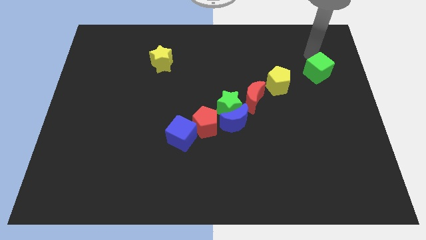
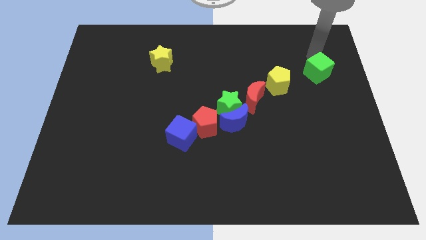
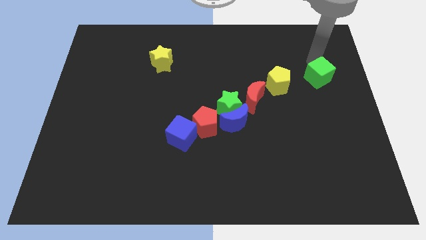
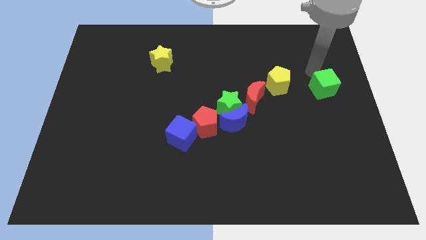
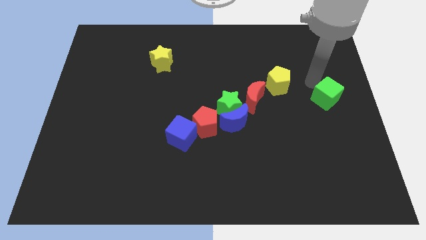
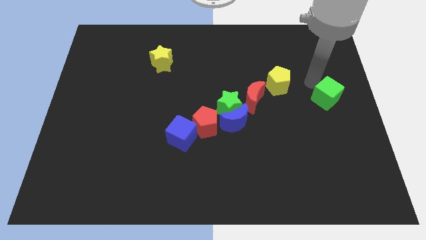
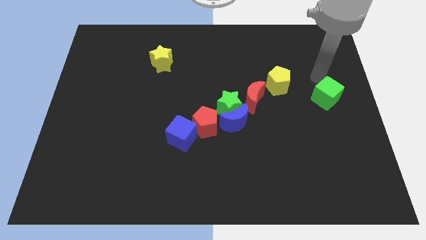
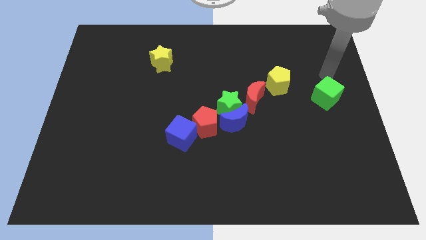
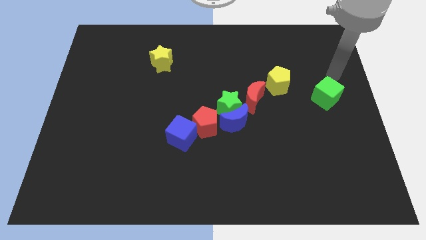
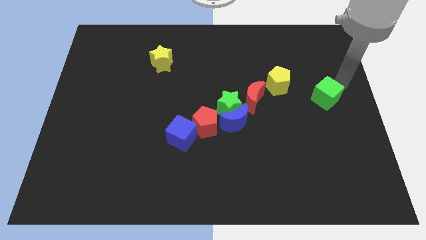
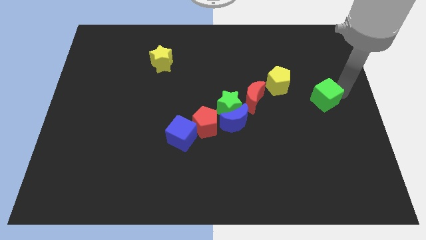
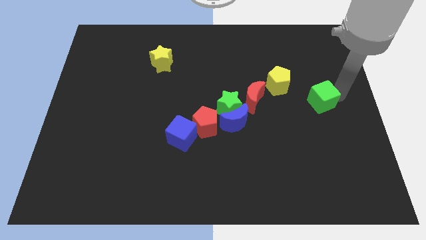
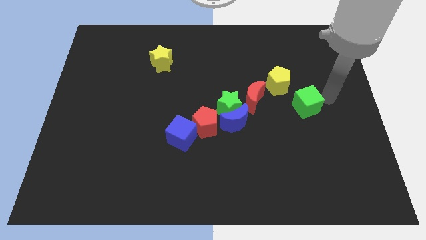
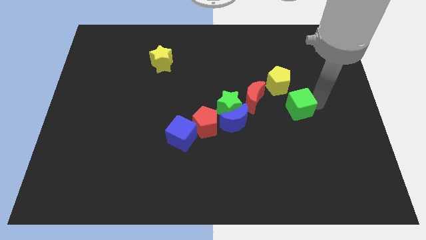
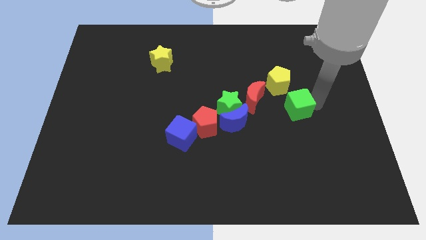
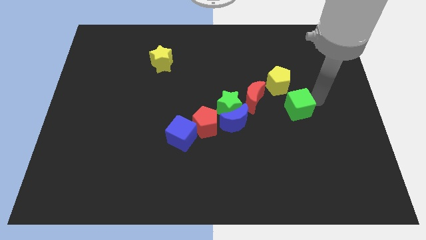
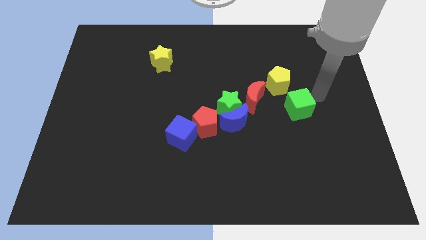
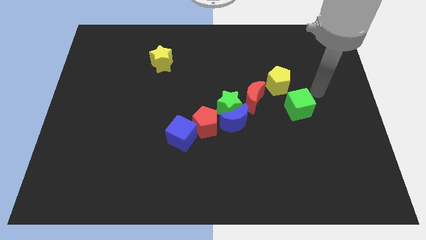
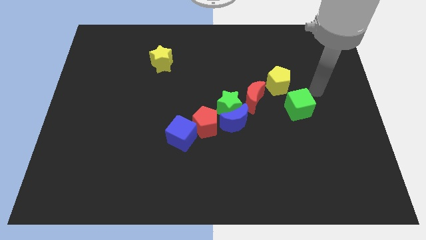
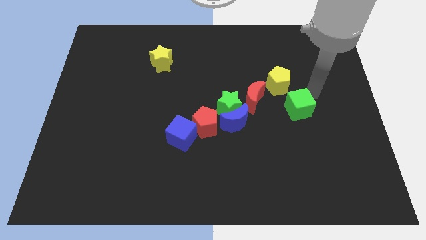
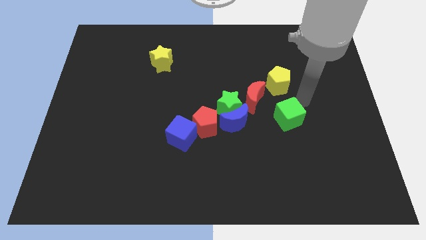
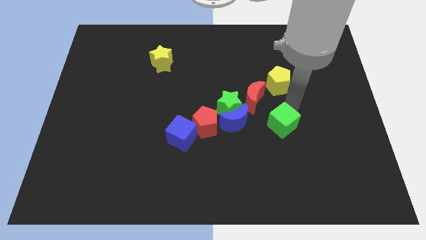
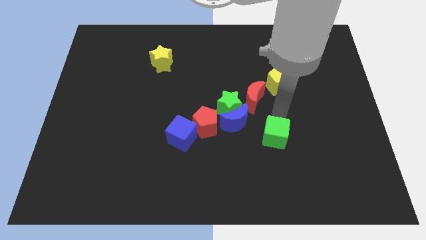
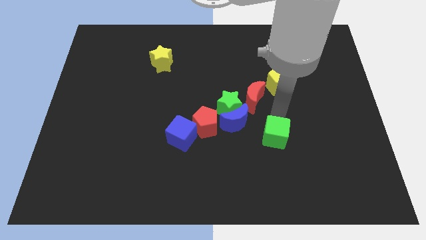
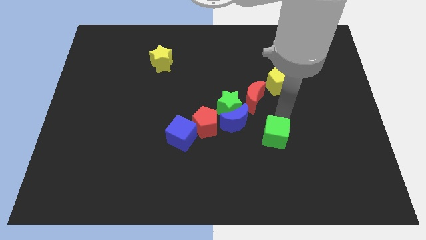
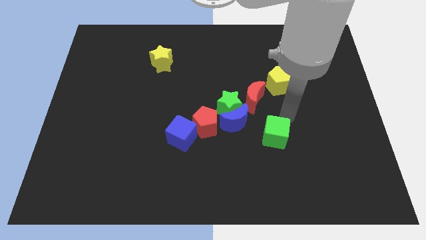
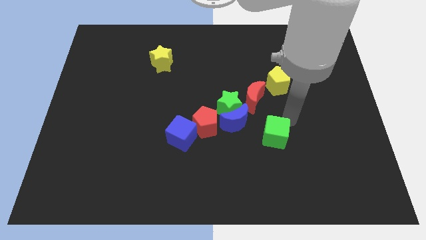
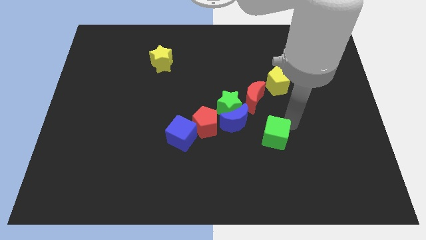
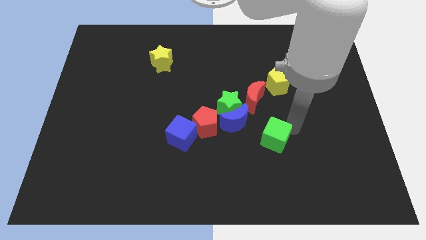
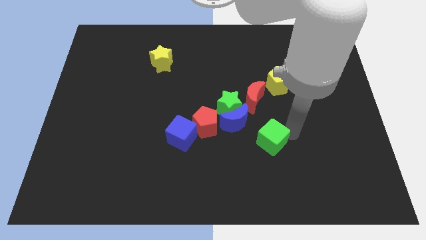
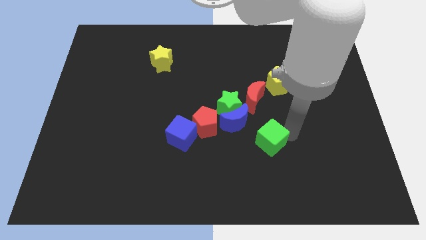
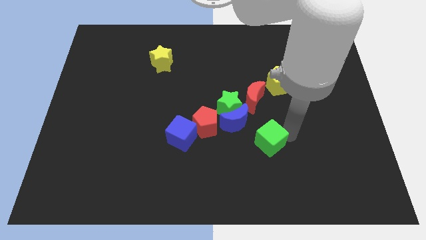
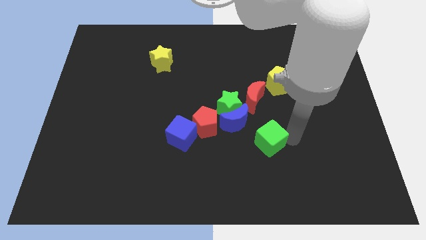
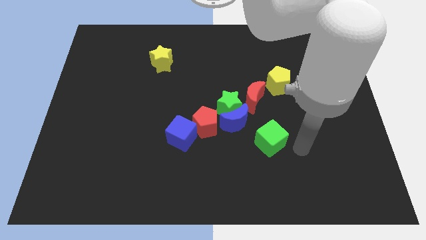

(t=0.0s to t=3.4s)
push the green cube towards the bottom side of the board

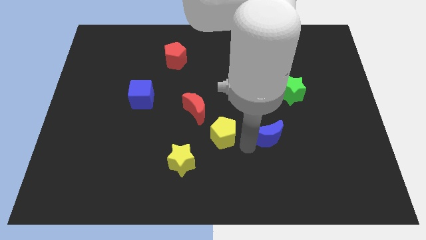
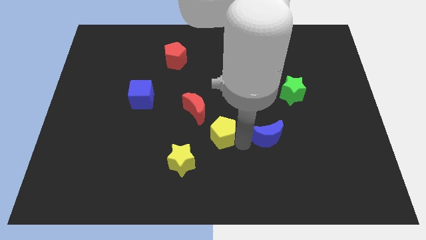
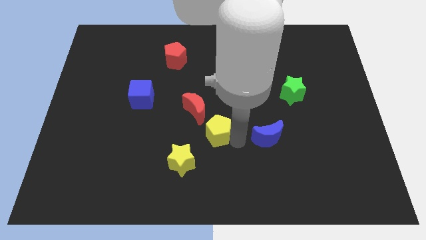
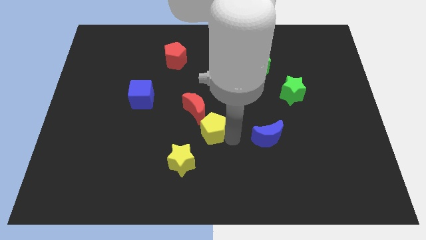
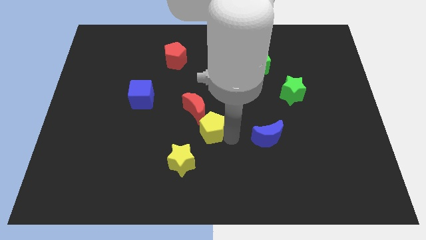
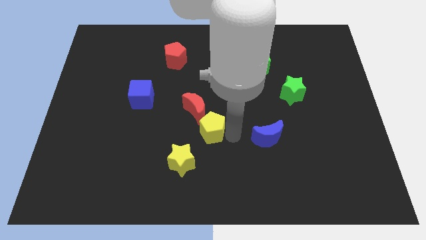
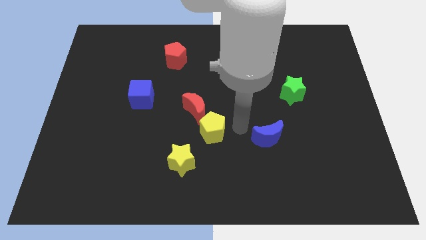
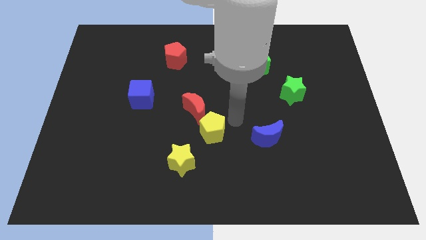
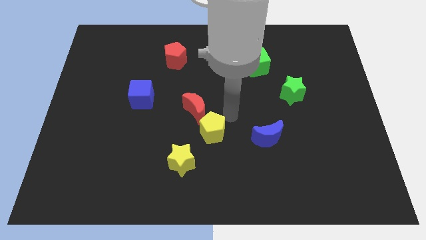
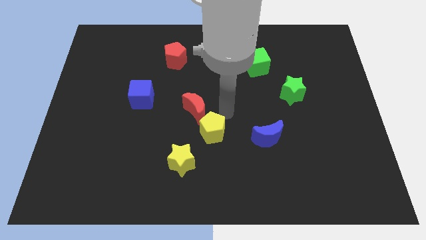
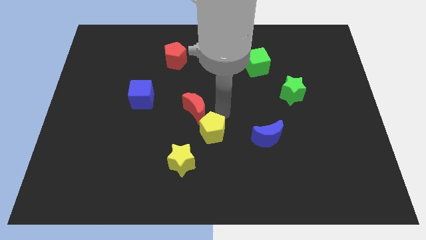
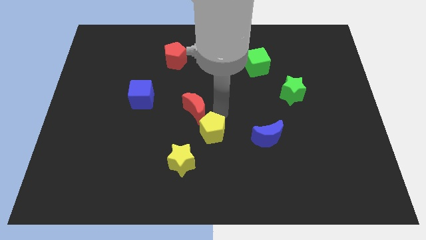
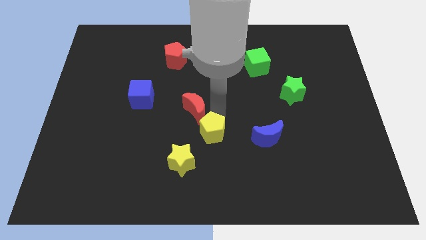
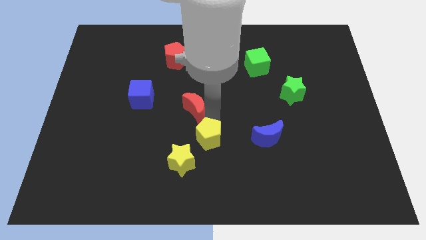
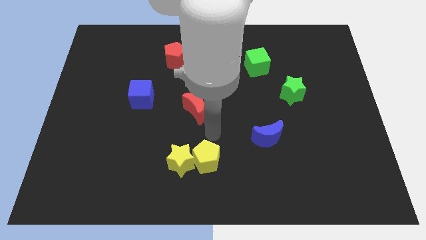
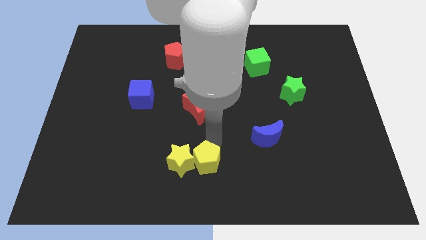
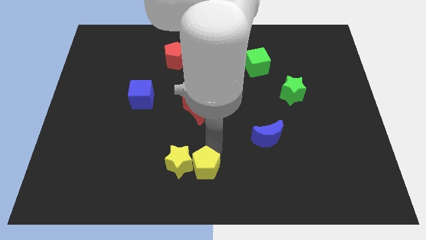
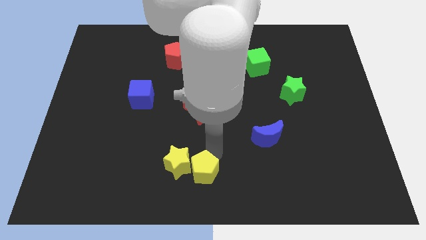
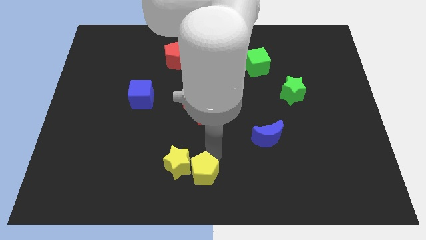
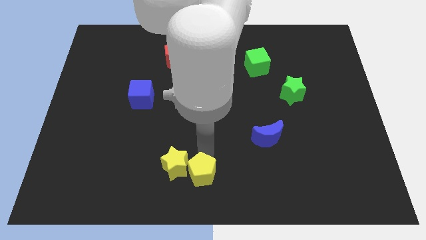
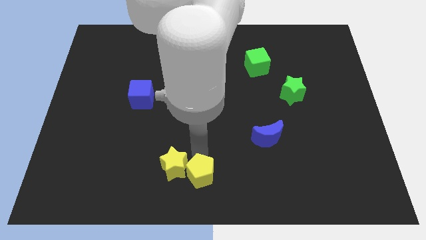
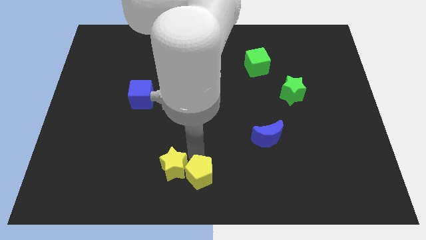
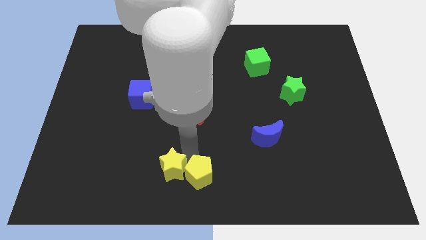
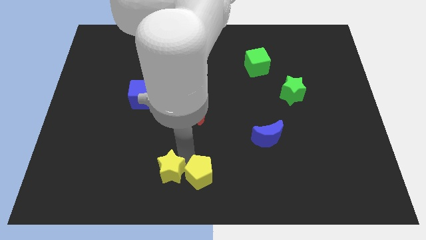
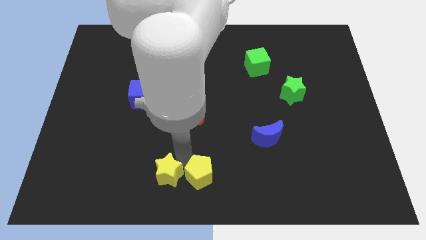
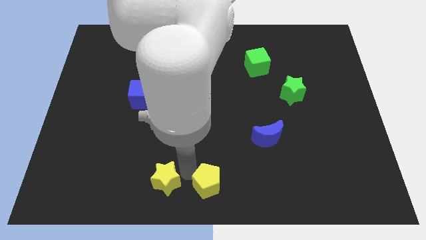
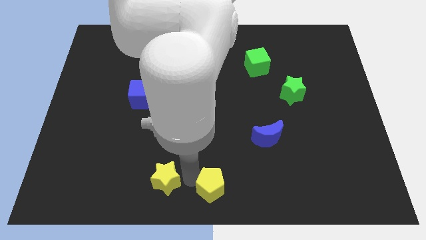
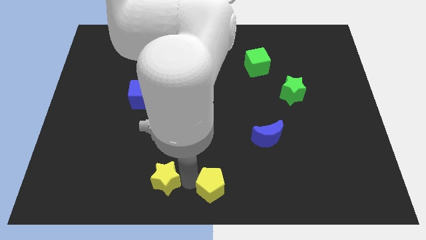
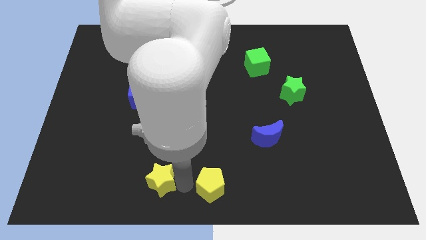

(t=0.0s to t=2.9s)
move the yellow pentagon to the bottom center of the board

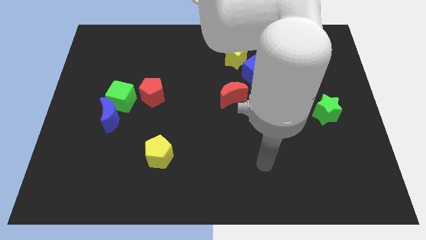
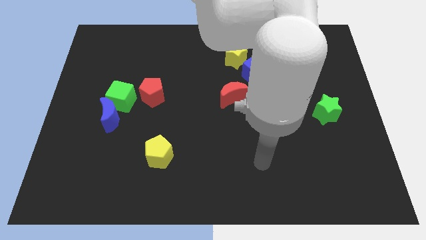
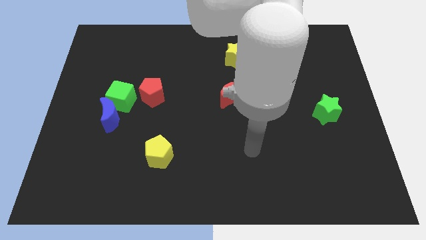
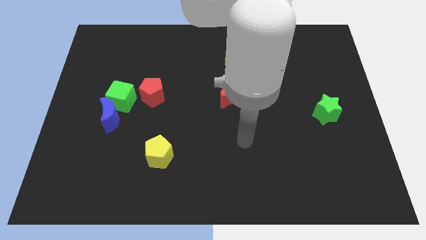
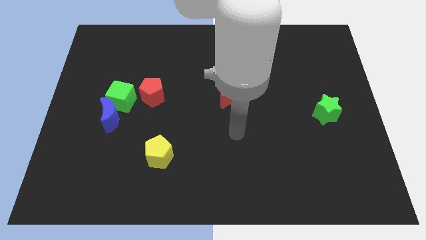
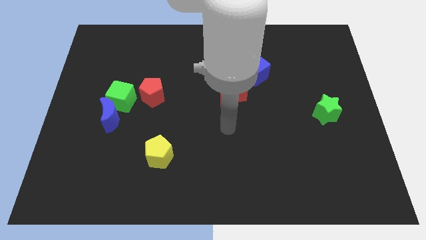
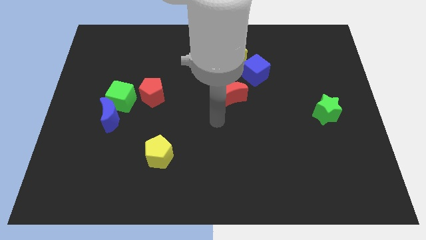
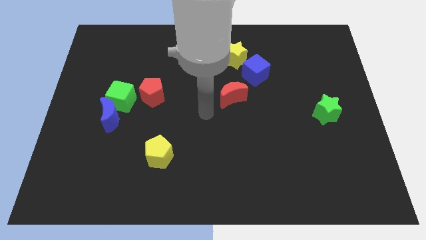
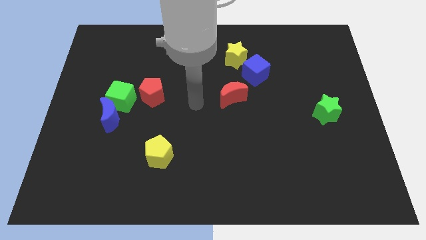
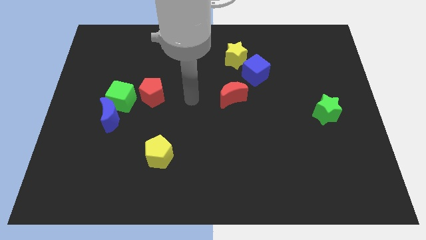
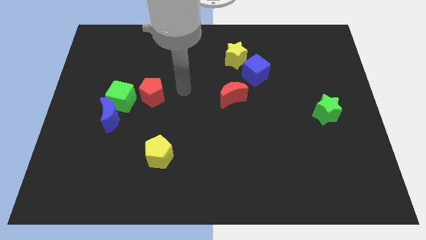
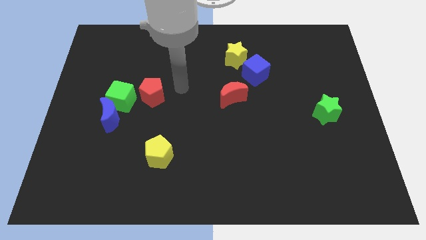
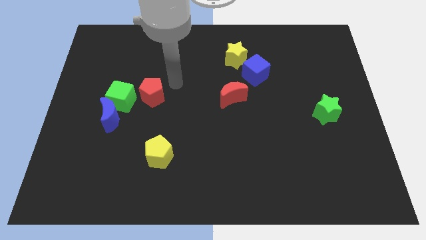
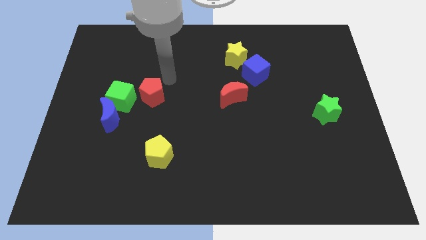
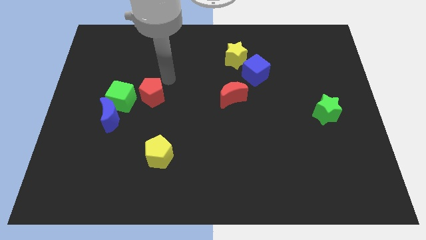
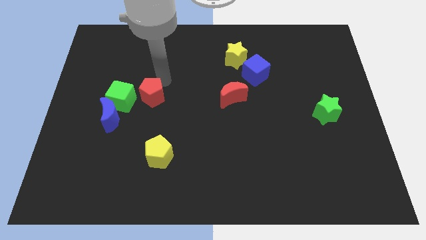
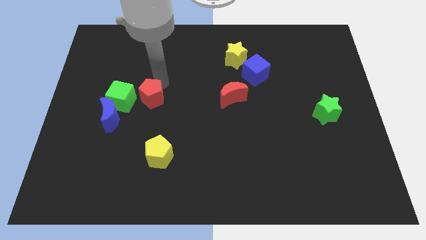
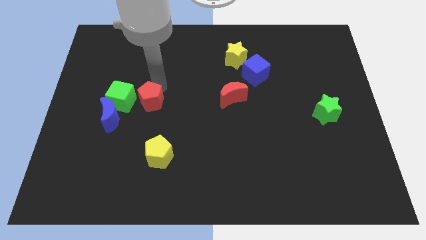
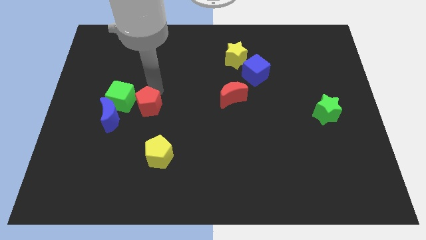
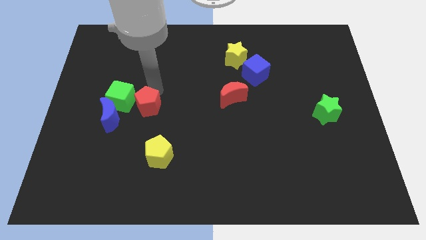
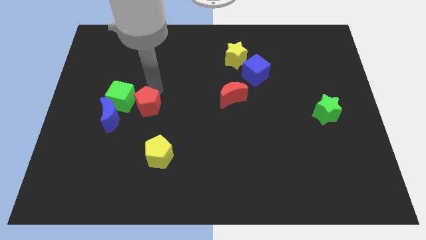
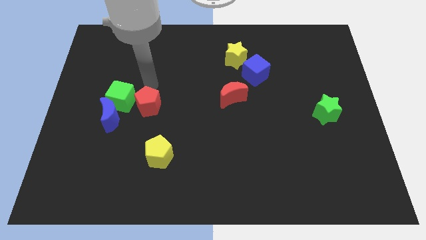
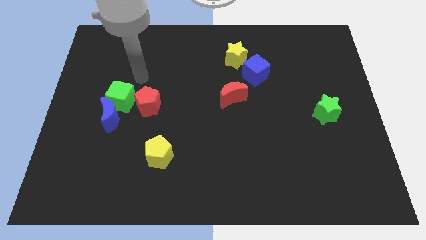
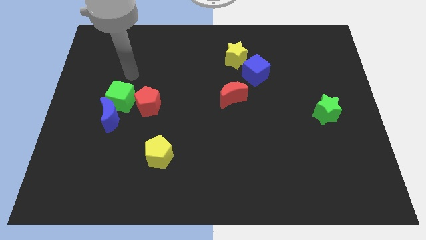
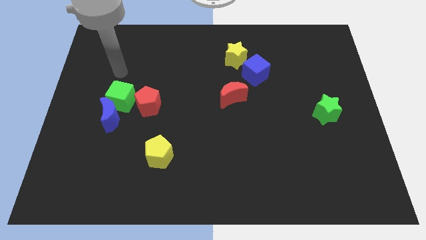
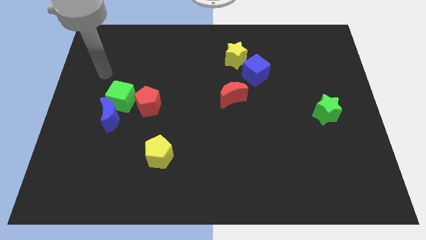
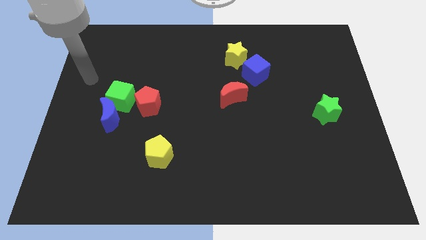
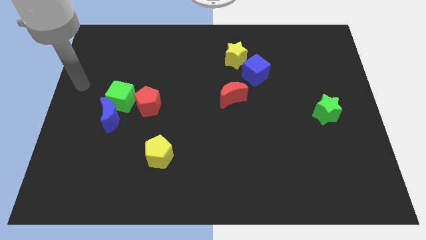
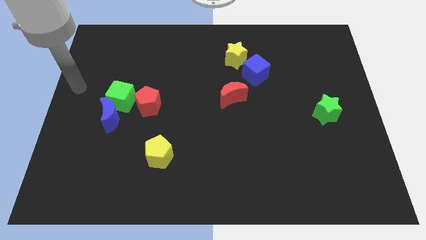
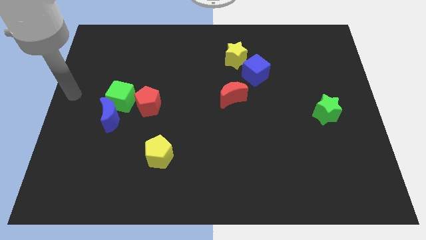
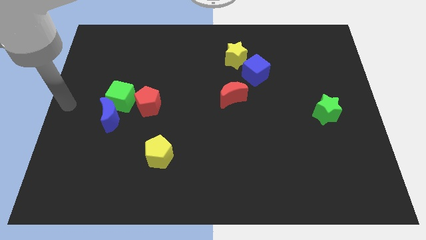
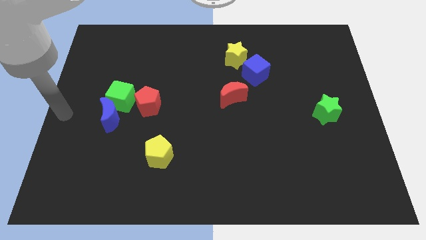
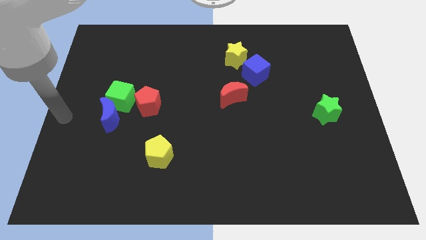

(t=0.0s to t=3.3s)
place red pentagon to the right of green cube
